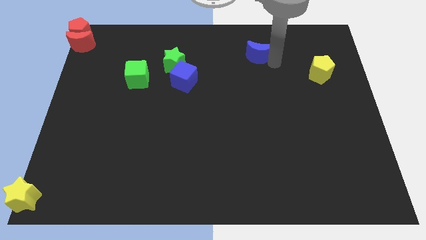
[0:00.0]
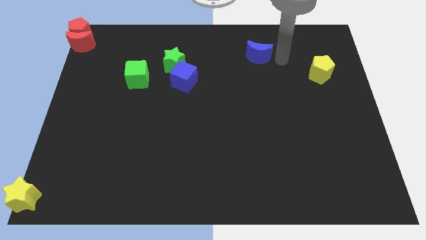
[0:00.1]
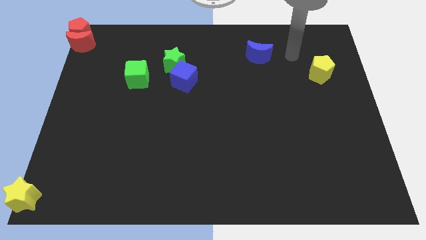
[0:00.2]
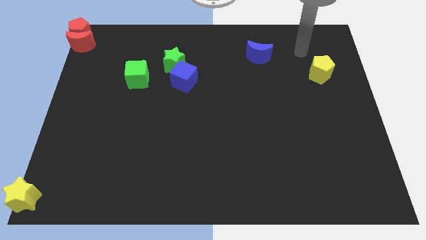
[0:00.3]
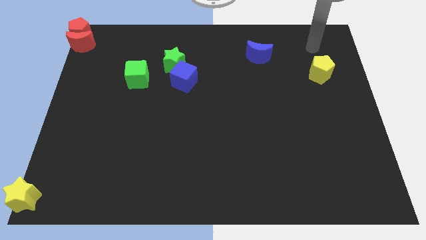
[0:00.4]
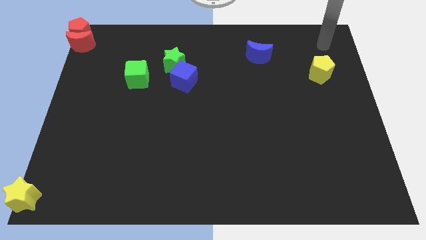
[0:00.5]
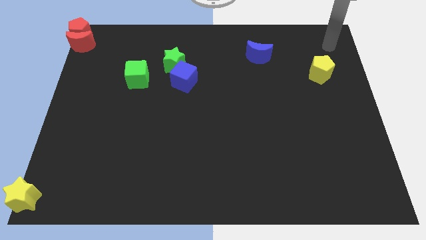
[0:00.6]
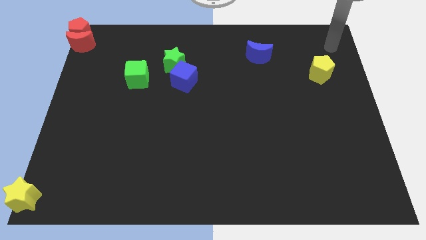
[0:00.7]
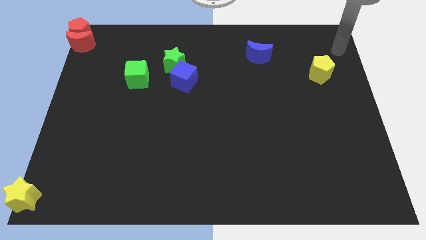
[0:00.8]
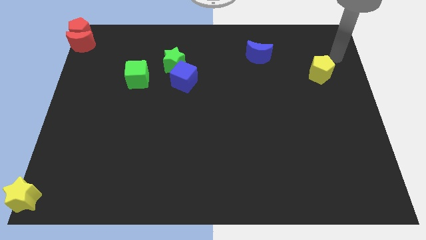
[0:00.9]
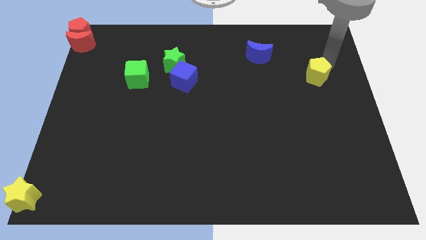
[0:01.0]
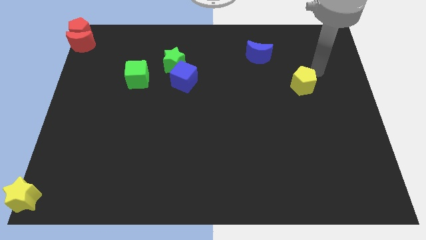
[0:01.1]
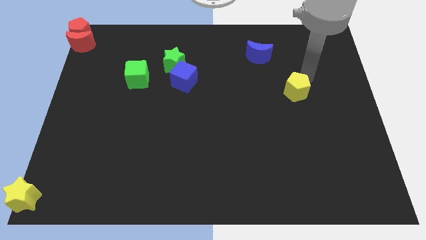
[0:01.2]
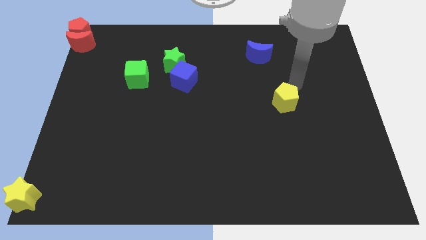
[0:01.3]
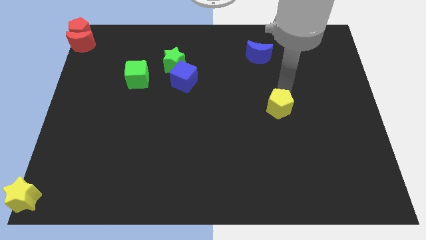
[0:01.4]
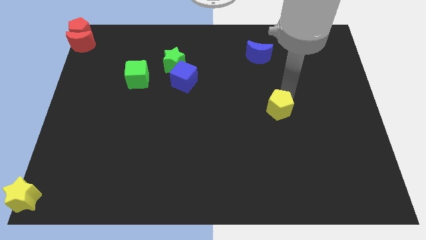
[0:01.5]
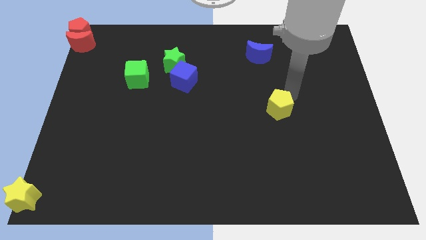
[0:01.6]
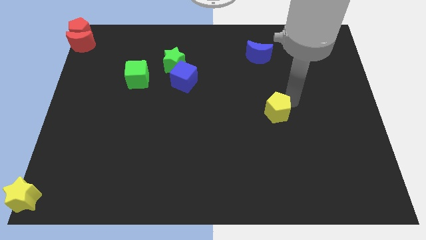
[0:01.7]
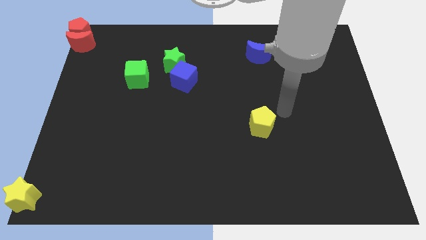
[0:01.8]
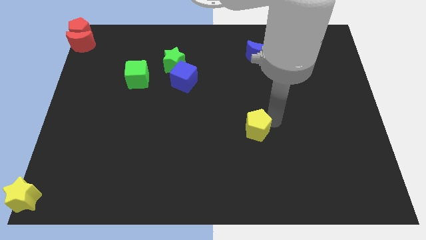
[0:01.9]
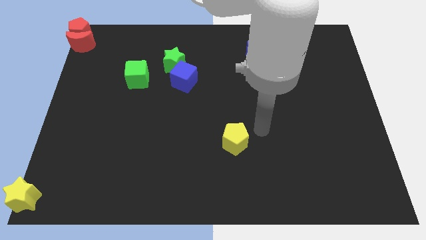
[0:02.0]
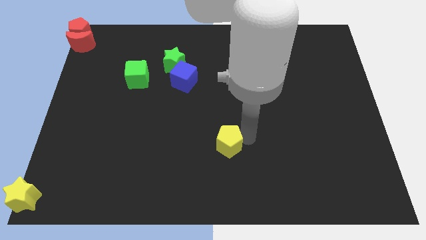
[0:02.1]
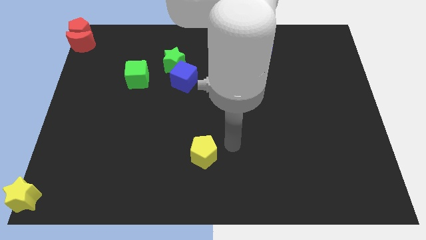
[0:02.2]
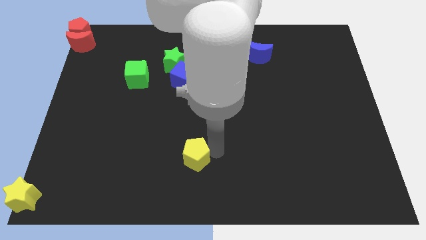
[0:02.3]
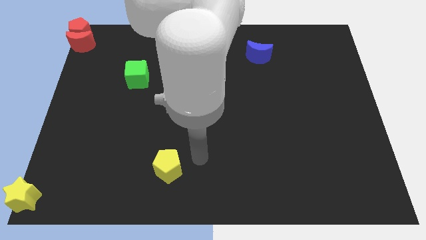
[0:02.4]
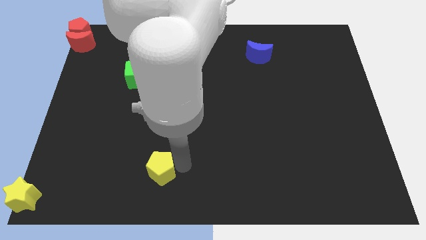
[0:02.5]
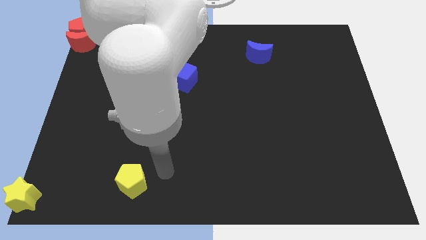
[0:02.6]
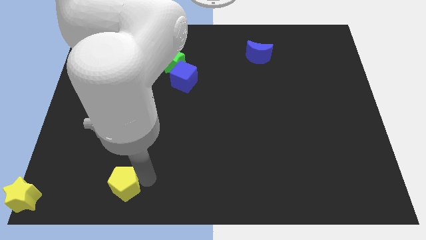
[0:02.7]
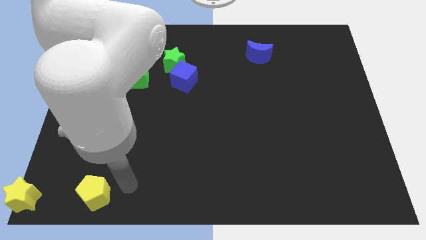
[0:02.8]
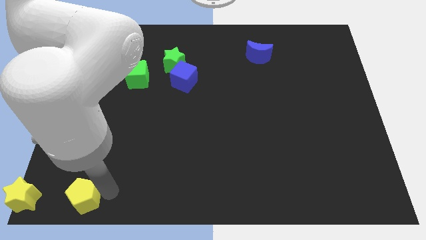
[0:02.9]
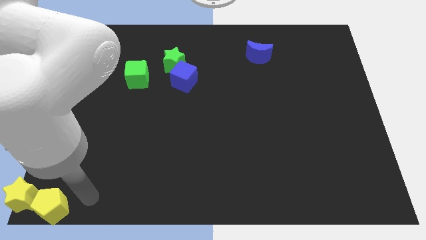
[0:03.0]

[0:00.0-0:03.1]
move the yellow pentagon parallel to the right of the yellow star

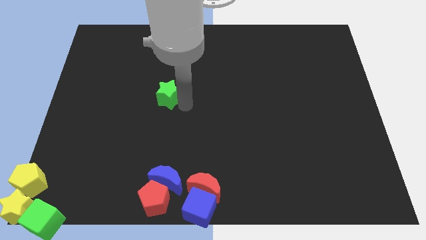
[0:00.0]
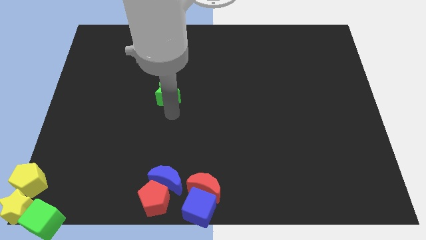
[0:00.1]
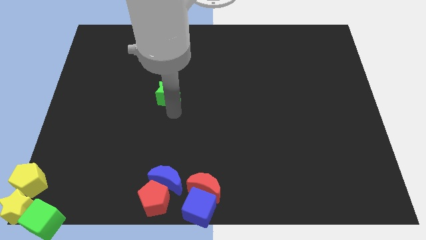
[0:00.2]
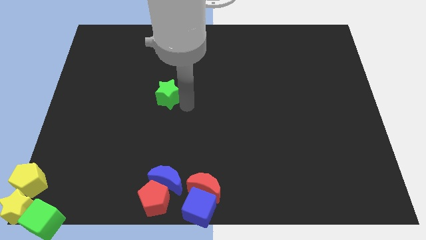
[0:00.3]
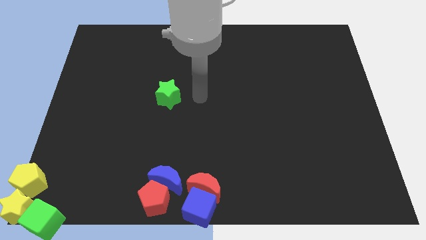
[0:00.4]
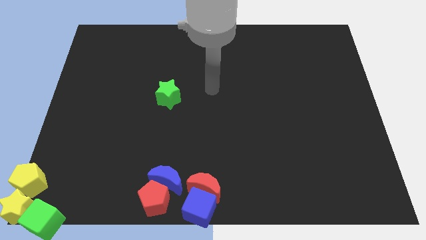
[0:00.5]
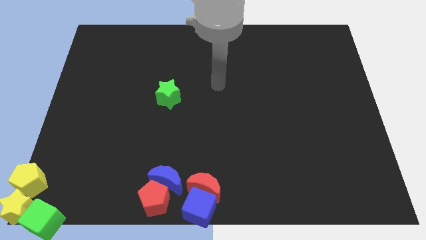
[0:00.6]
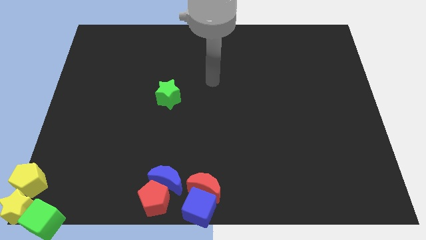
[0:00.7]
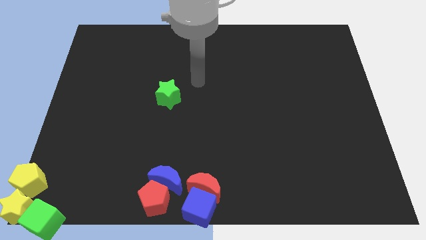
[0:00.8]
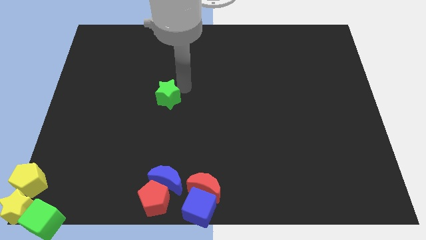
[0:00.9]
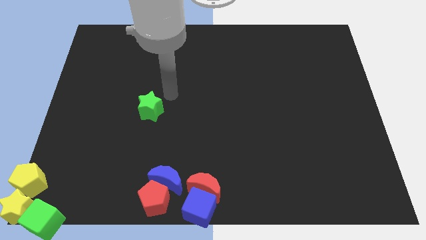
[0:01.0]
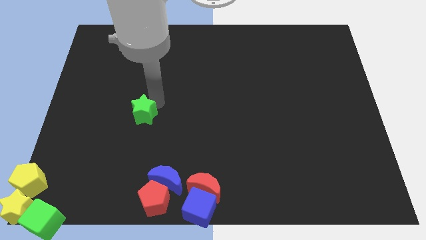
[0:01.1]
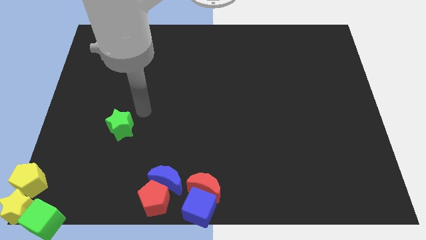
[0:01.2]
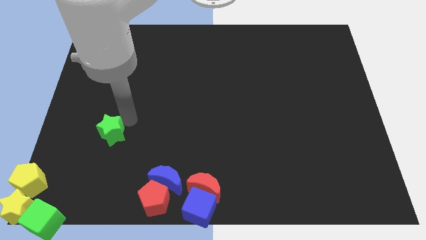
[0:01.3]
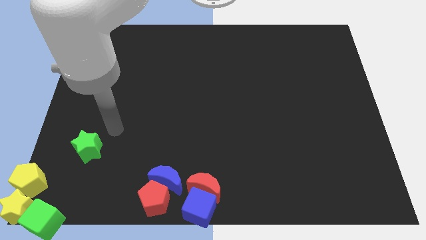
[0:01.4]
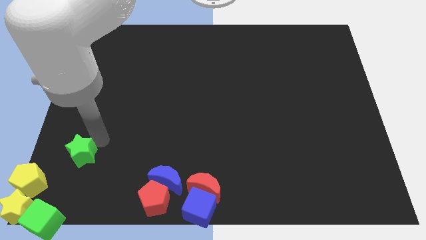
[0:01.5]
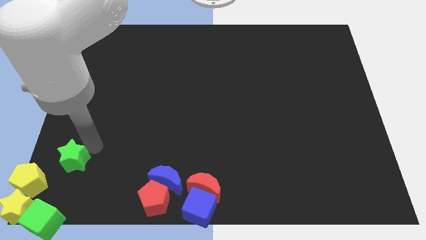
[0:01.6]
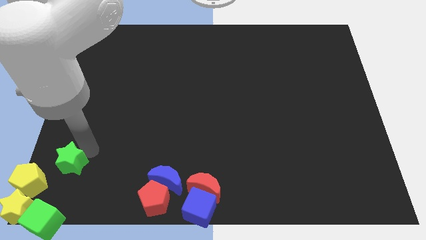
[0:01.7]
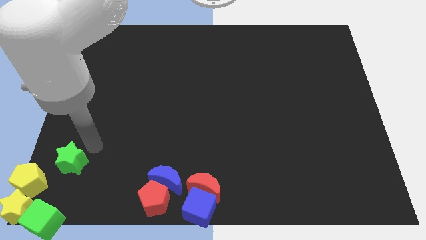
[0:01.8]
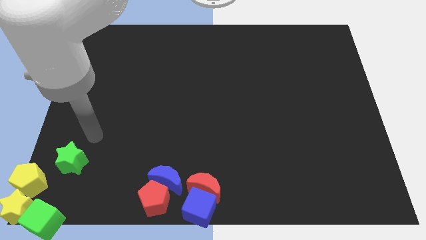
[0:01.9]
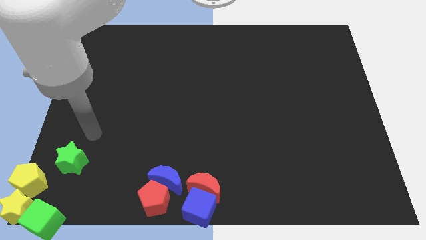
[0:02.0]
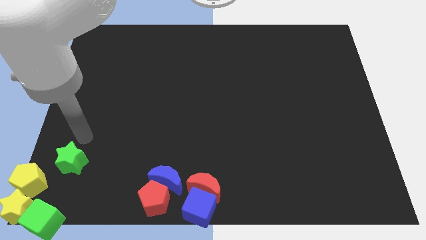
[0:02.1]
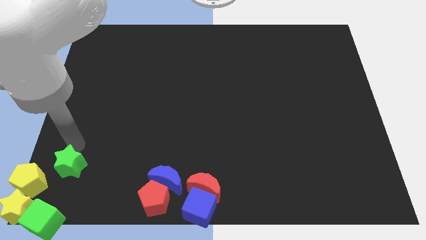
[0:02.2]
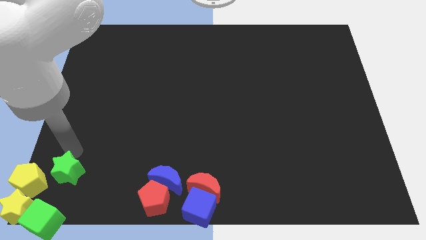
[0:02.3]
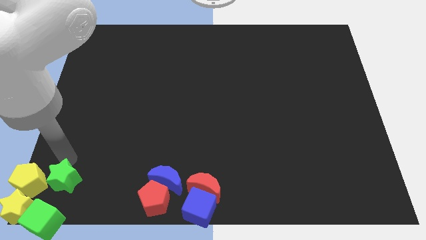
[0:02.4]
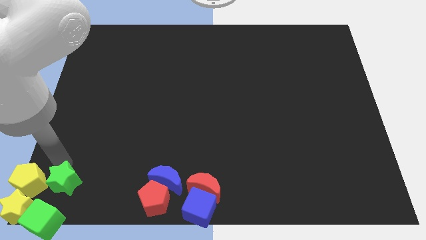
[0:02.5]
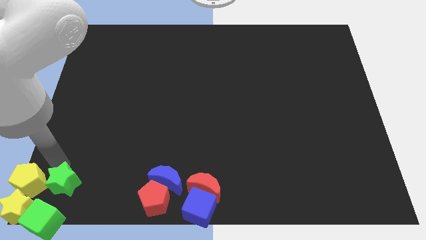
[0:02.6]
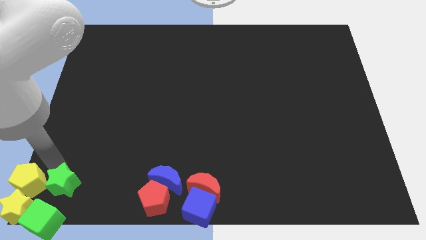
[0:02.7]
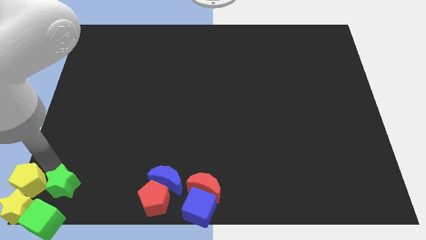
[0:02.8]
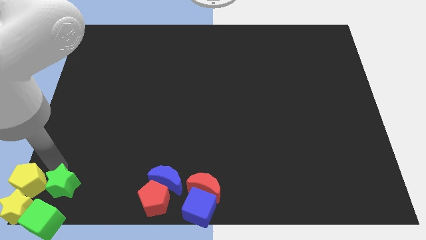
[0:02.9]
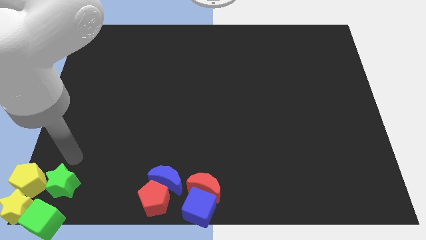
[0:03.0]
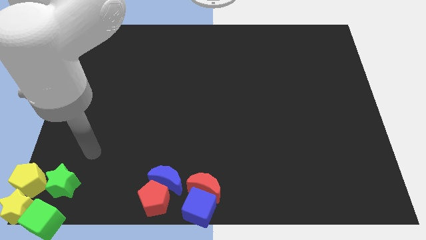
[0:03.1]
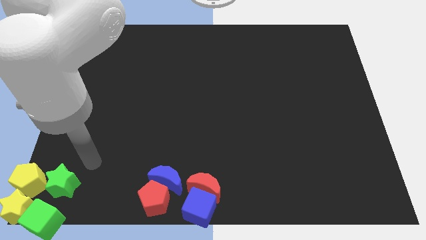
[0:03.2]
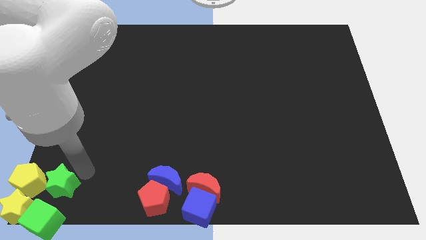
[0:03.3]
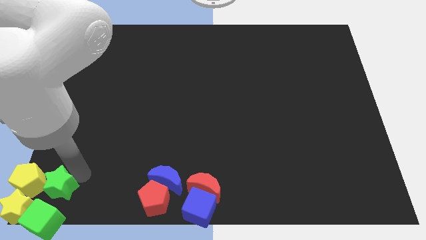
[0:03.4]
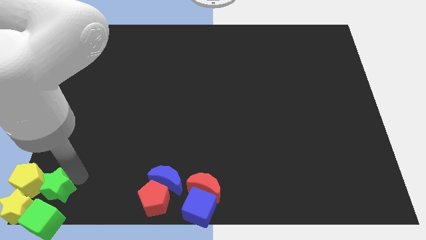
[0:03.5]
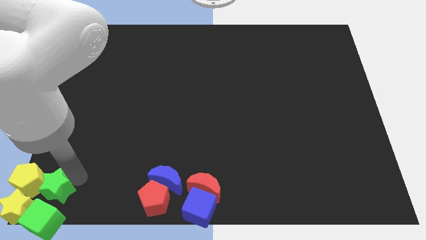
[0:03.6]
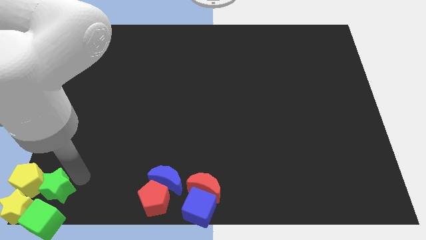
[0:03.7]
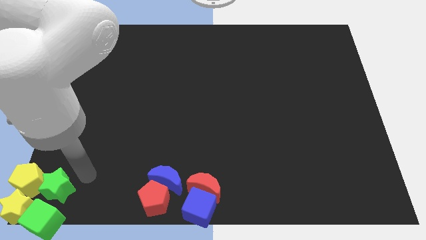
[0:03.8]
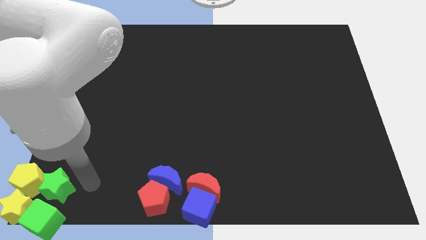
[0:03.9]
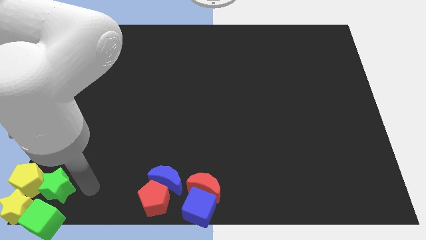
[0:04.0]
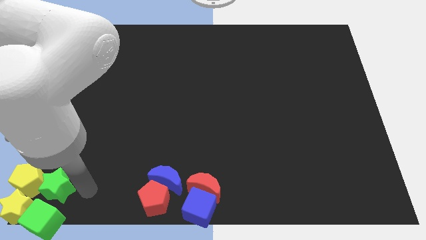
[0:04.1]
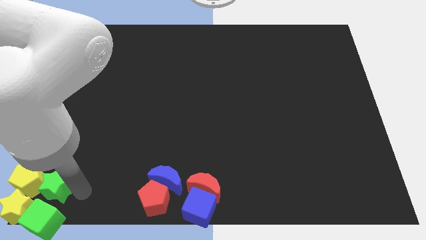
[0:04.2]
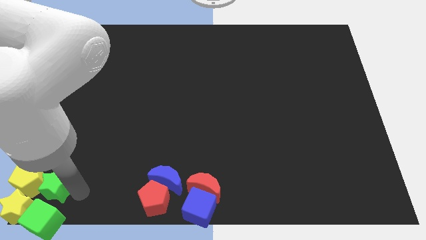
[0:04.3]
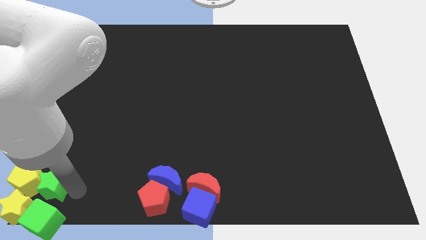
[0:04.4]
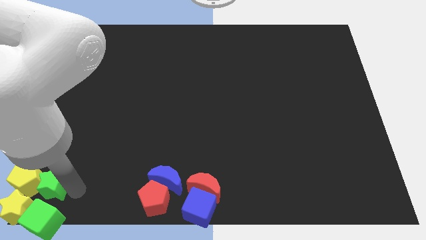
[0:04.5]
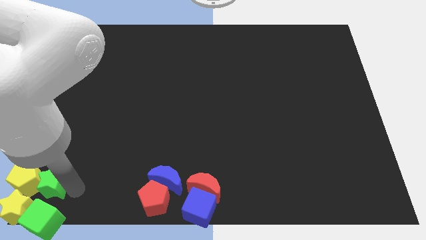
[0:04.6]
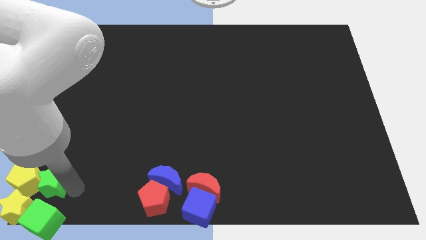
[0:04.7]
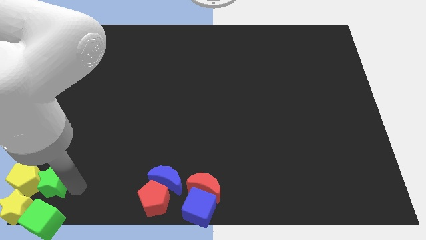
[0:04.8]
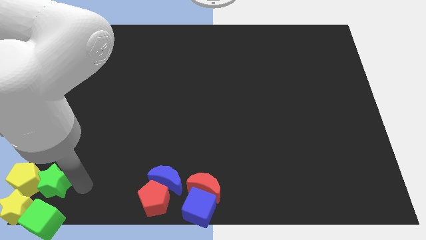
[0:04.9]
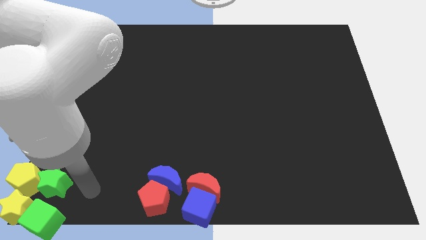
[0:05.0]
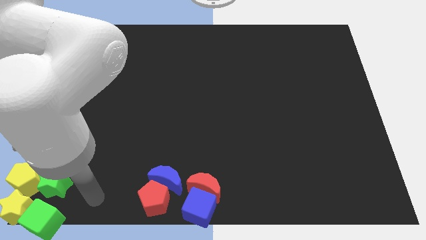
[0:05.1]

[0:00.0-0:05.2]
push the green star to the yellow pentagon

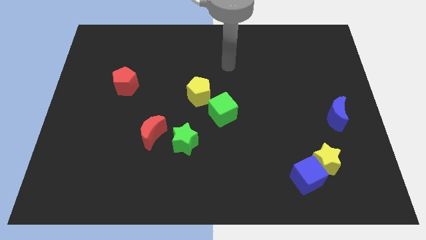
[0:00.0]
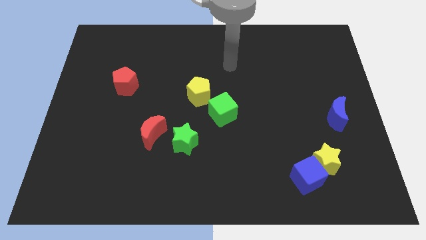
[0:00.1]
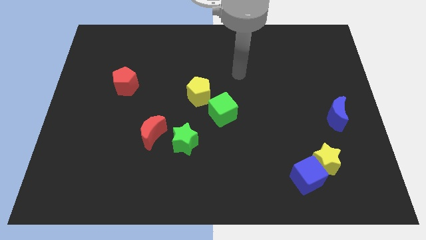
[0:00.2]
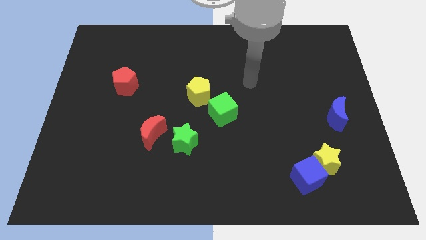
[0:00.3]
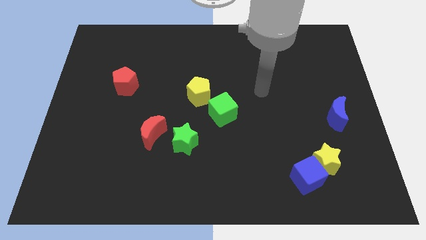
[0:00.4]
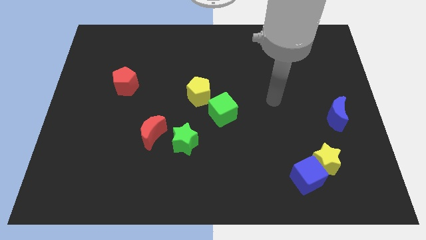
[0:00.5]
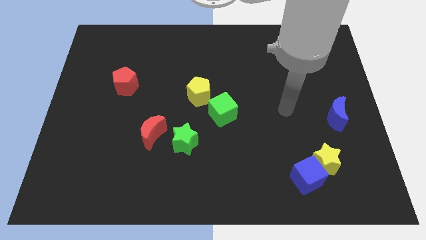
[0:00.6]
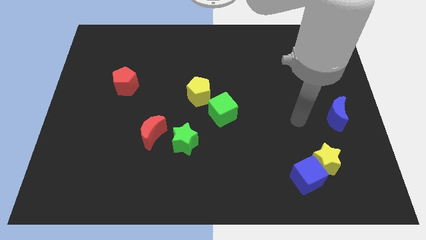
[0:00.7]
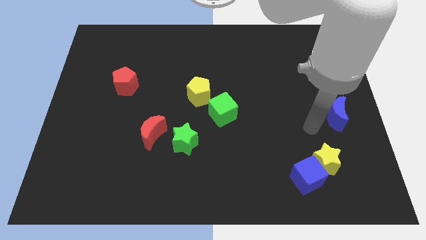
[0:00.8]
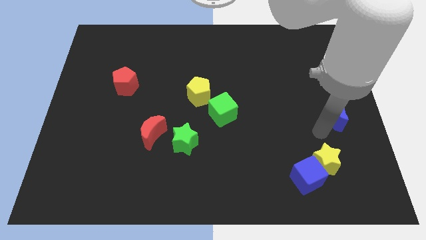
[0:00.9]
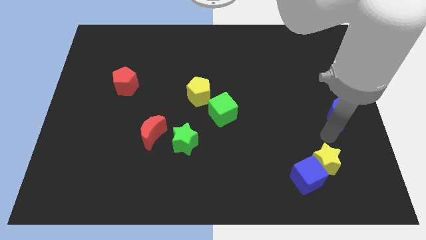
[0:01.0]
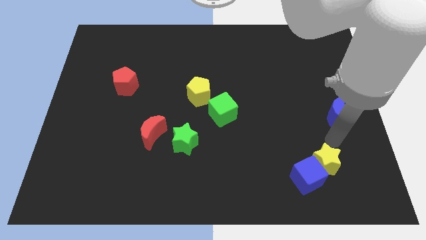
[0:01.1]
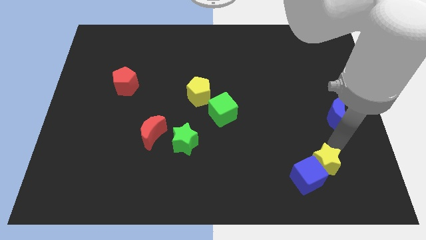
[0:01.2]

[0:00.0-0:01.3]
move the arm to the top of the yellow star
